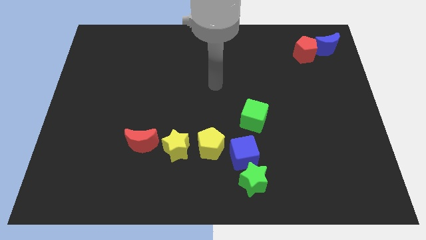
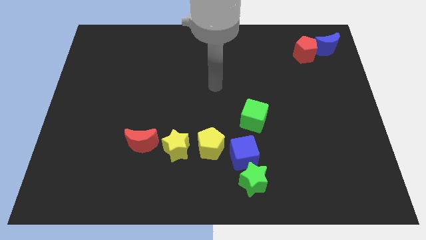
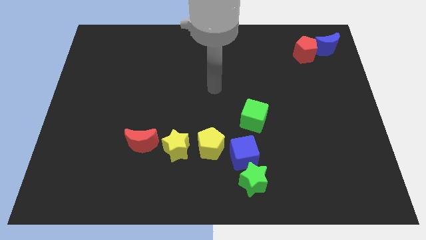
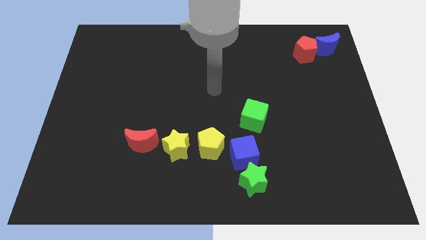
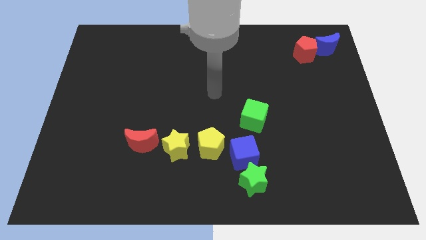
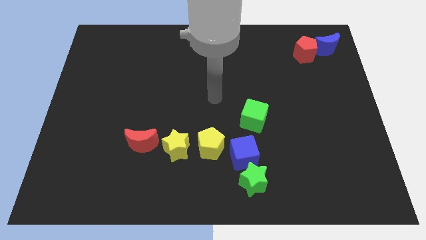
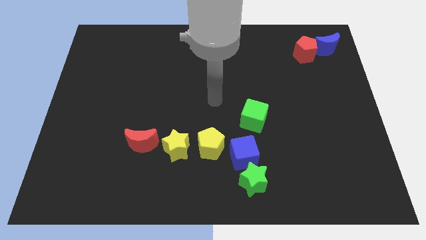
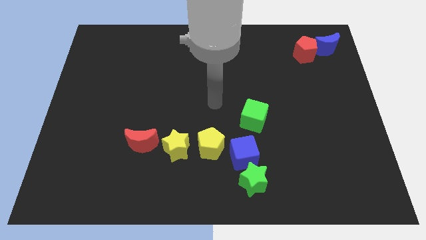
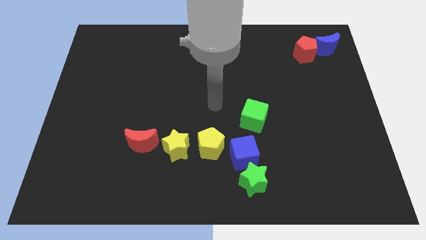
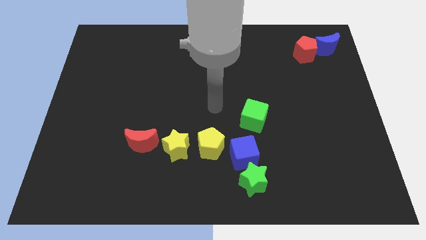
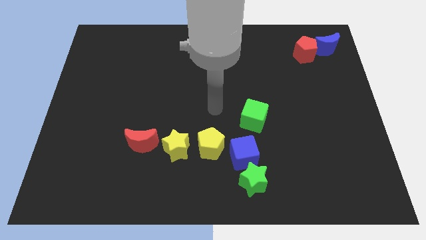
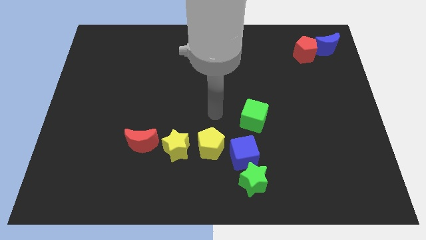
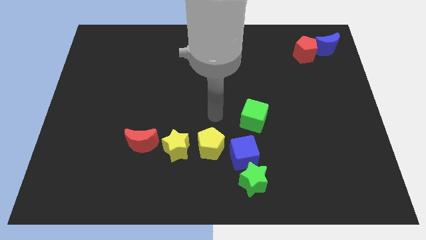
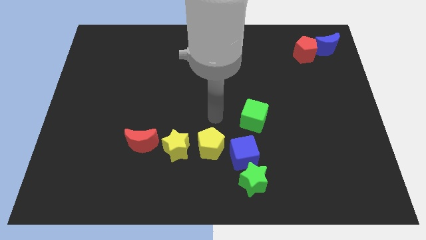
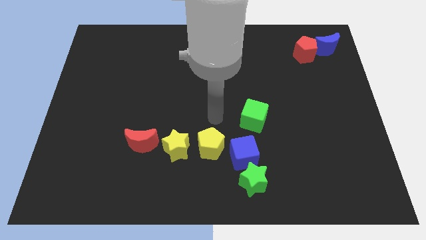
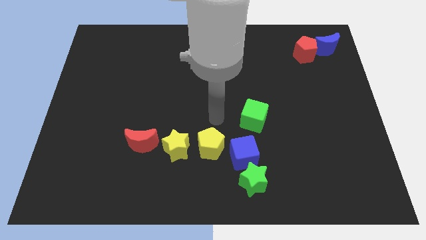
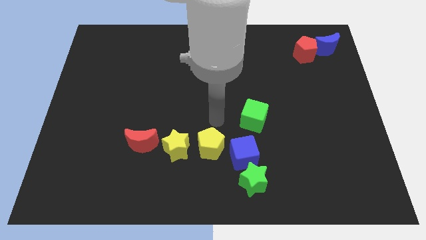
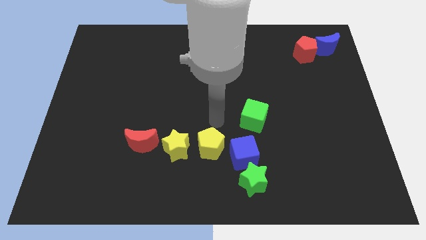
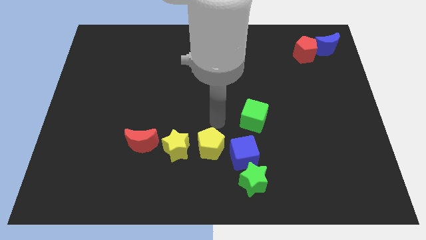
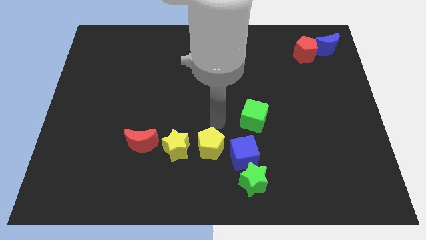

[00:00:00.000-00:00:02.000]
place arm on the top of yellow pentagon

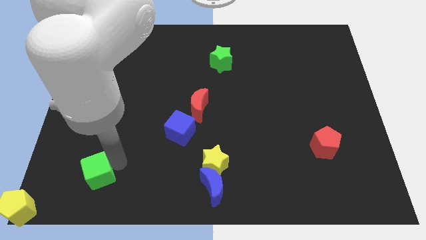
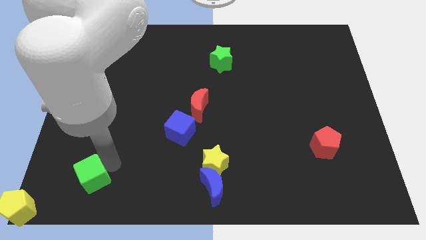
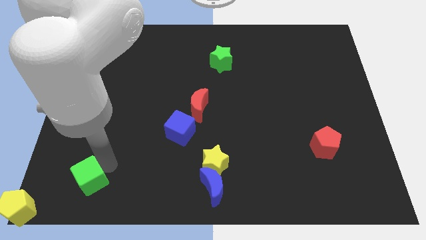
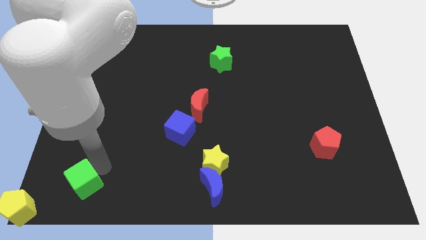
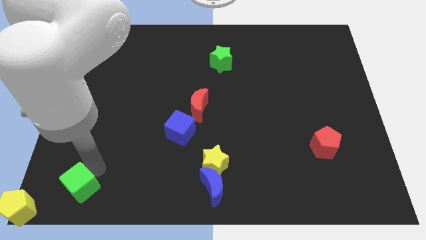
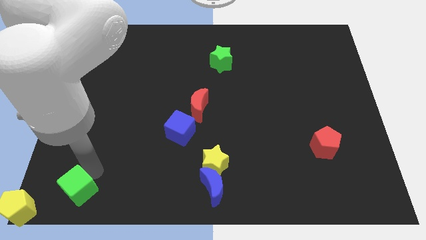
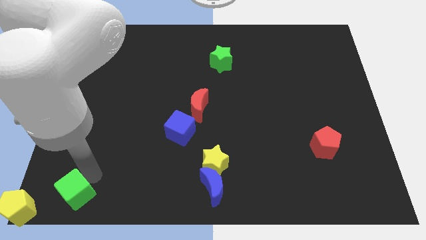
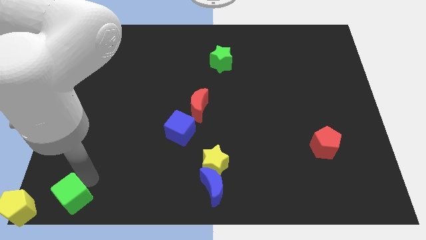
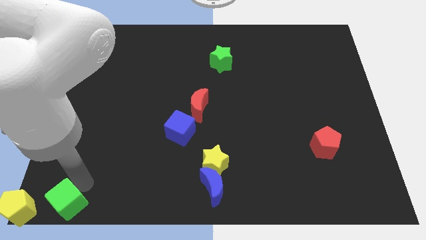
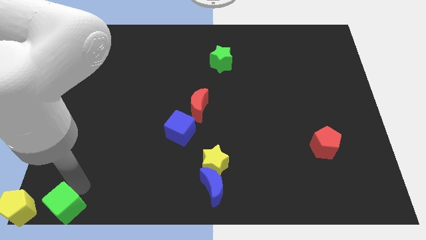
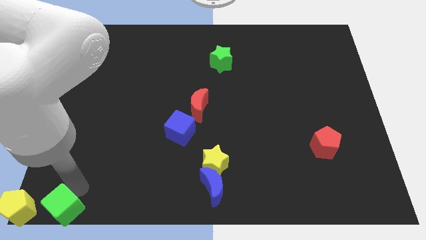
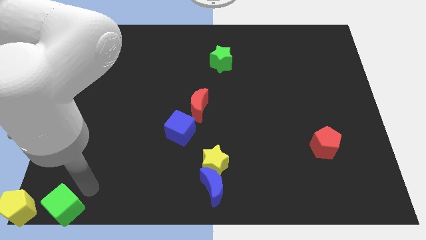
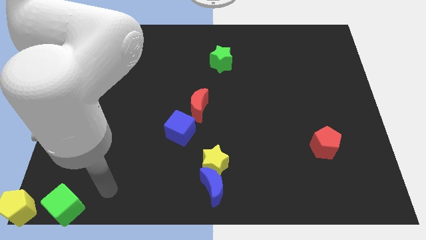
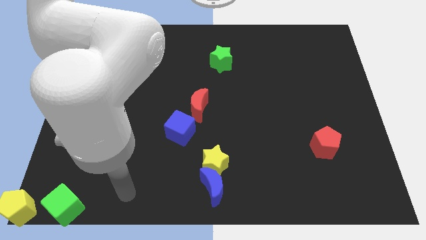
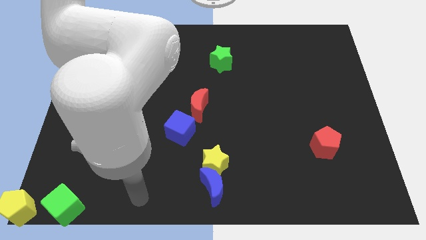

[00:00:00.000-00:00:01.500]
move green cube close to yellow pentagon

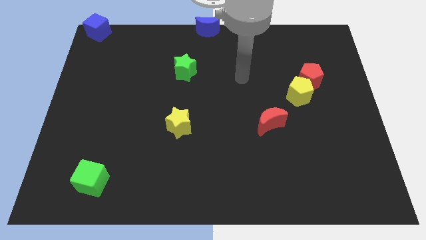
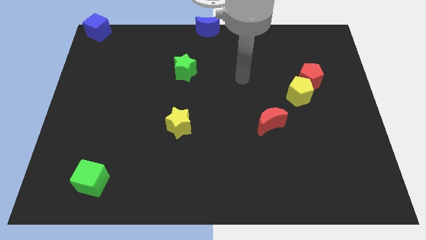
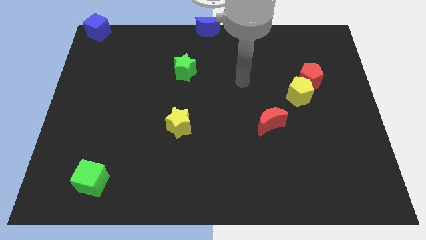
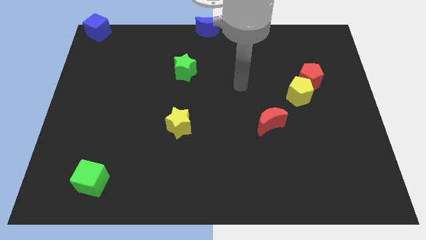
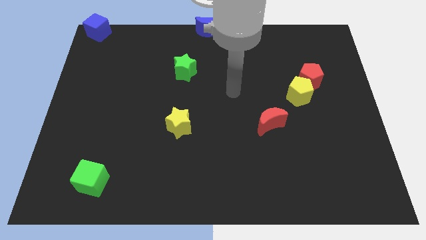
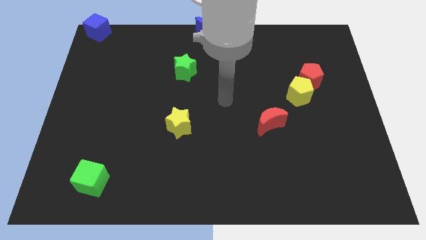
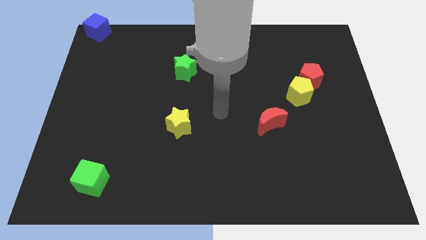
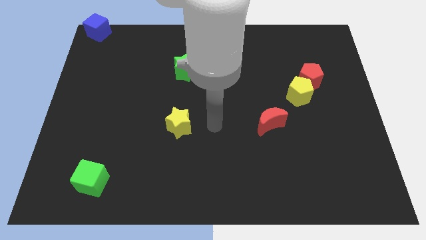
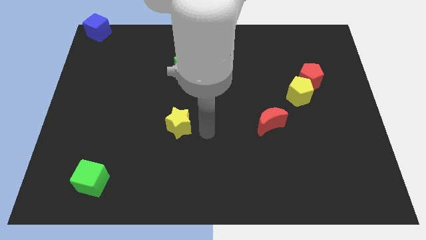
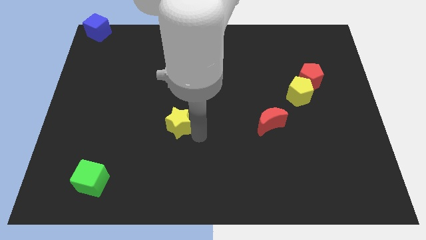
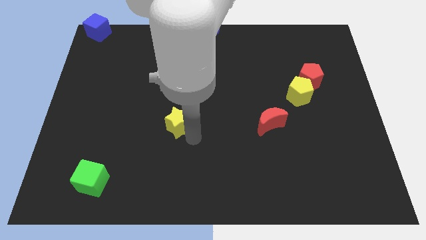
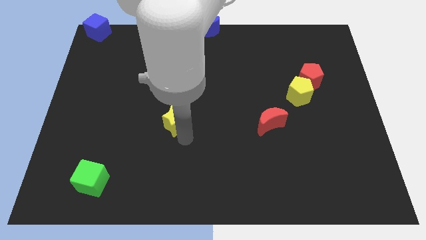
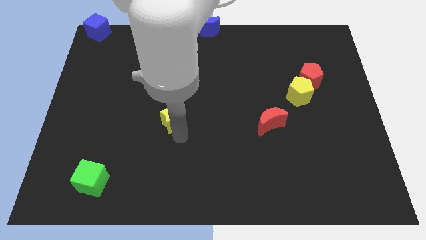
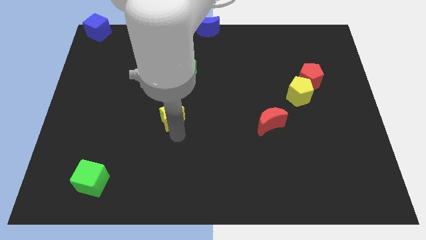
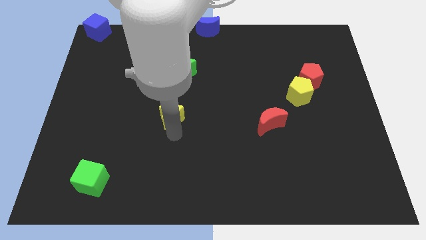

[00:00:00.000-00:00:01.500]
touch the yellow star

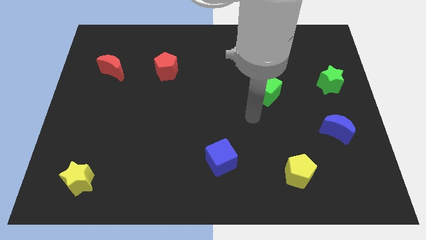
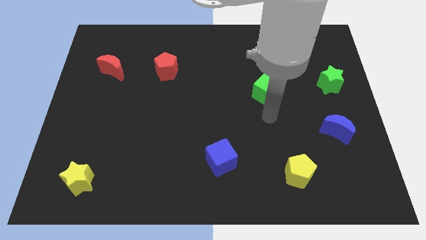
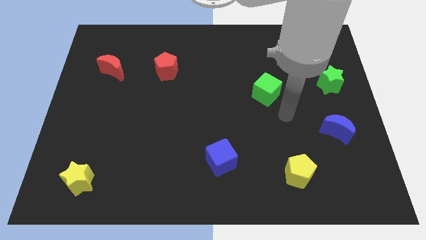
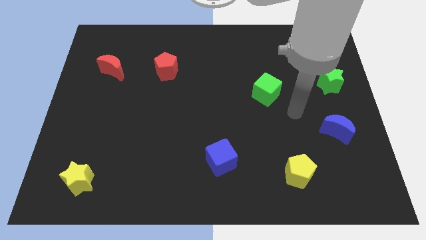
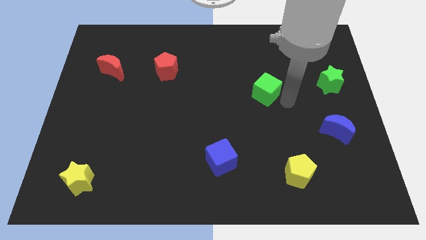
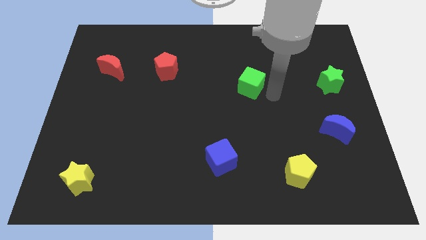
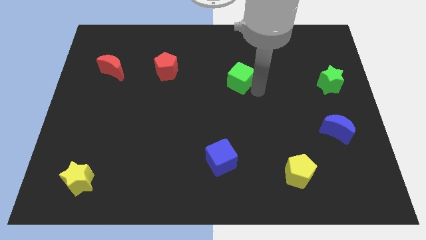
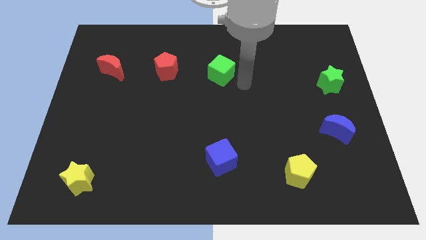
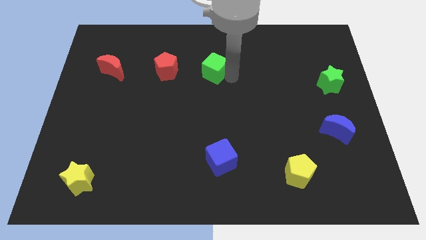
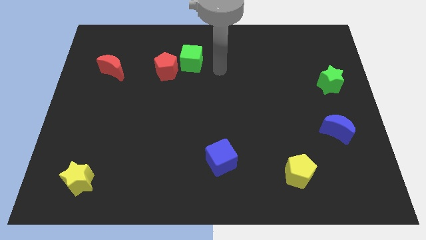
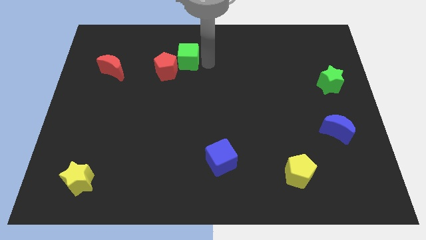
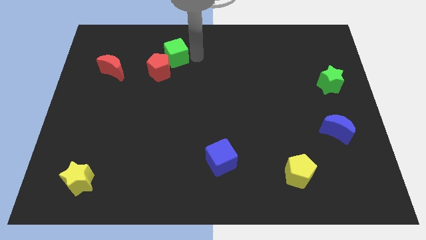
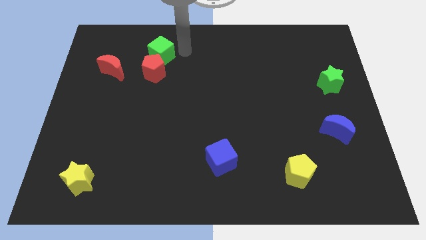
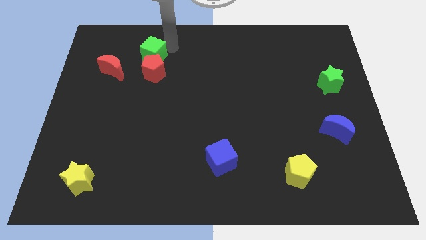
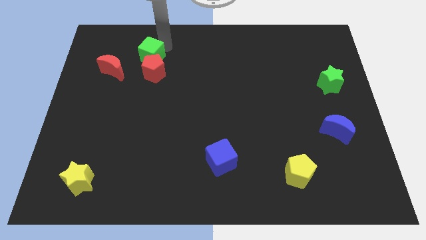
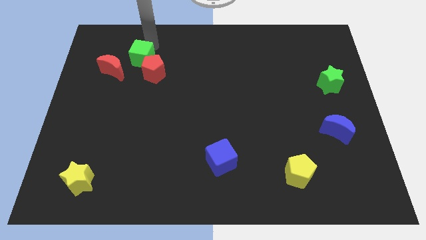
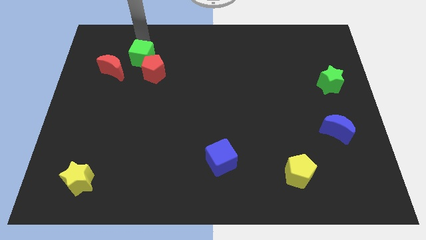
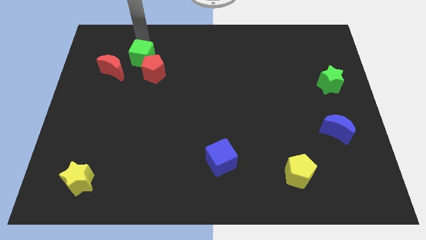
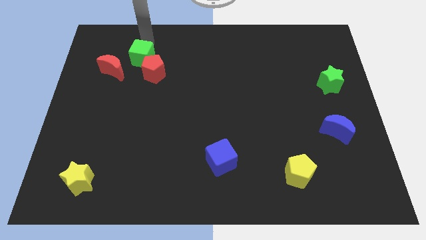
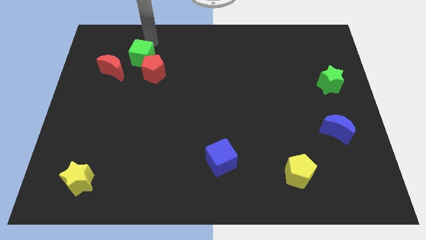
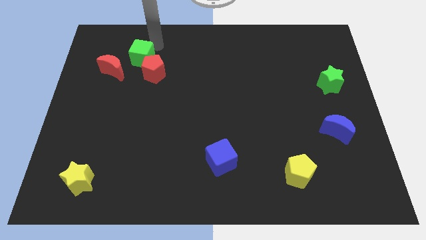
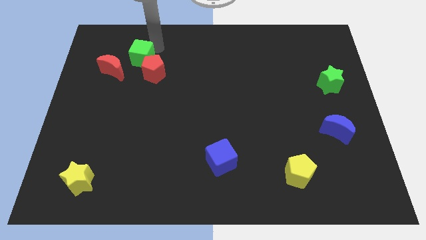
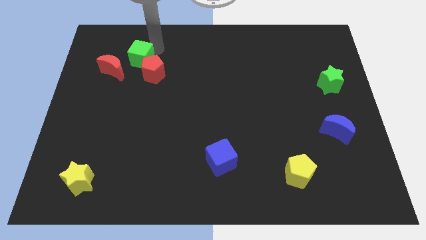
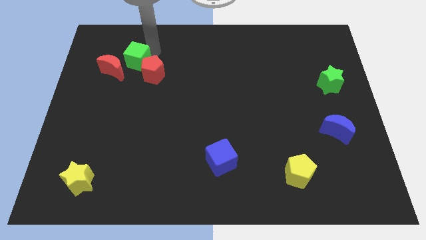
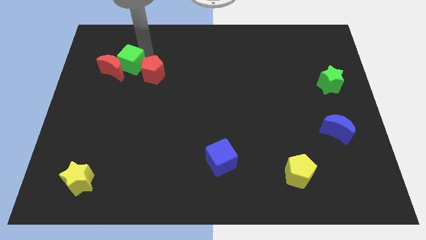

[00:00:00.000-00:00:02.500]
place the green cube between the red blocks

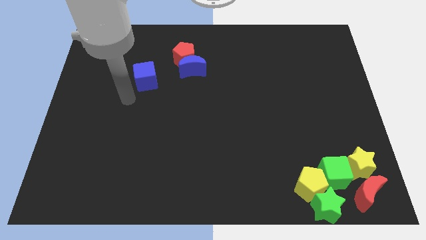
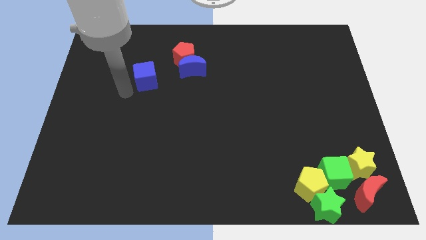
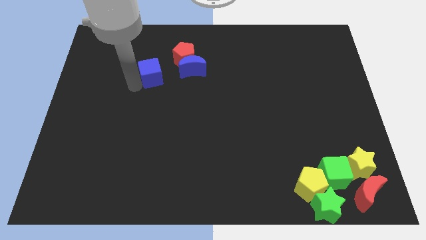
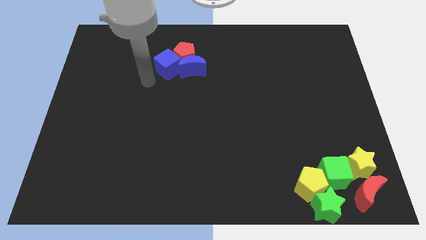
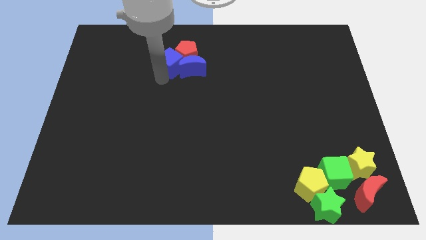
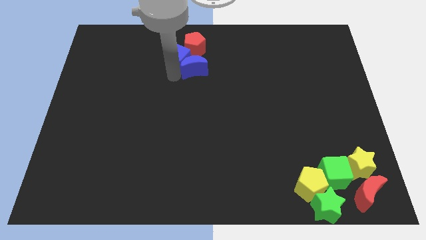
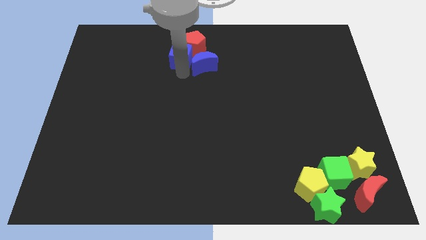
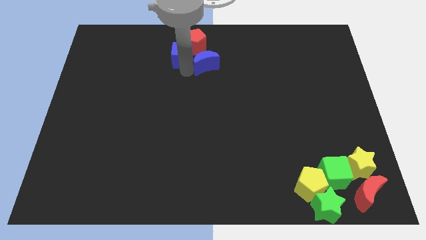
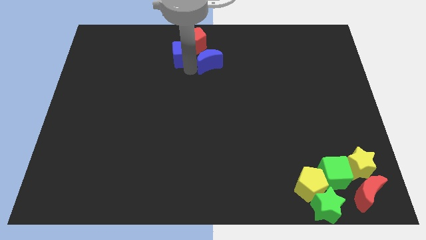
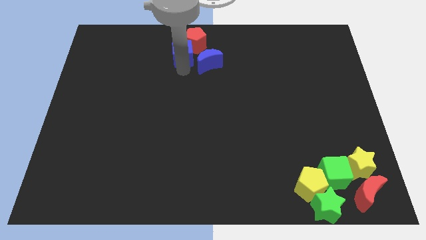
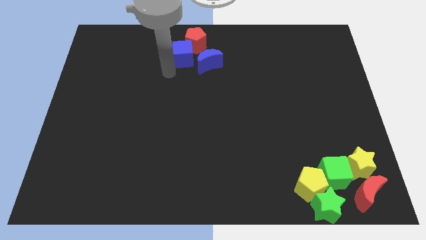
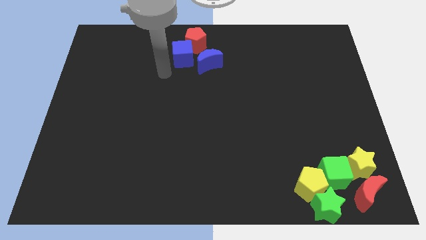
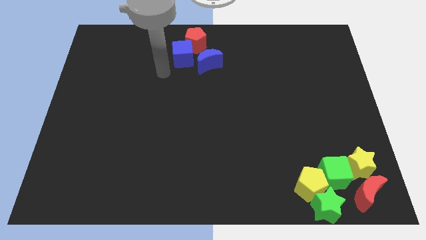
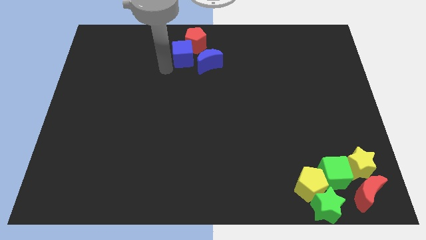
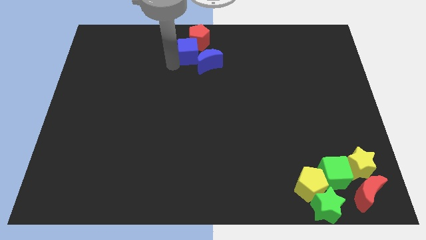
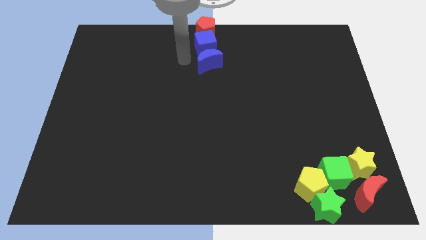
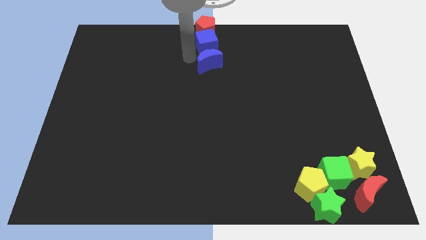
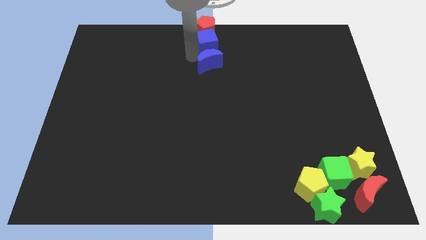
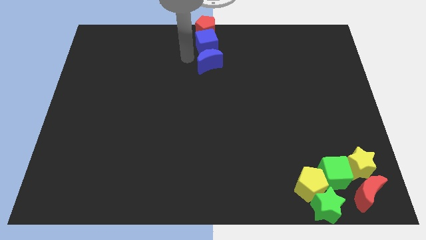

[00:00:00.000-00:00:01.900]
move the blue cube below the red pentagon
